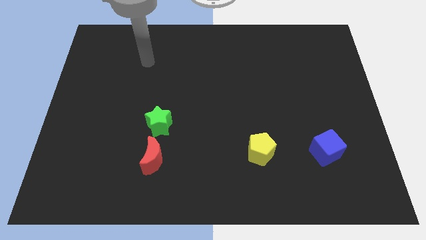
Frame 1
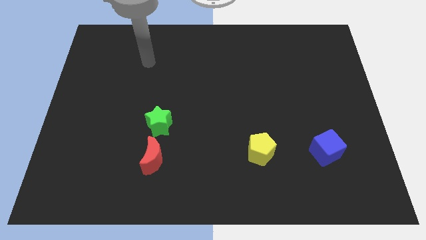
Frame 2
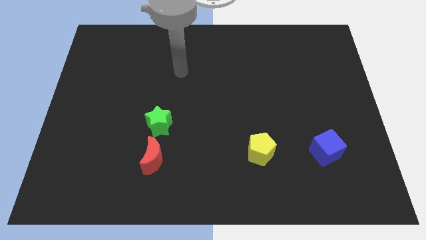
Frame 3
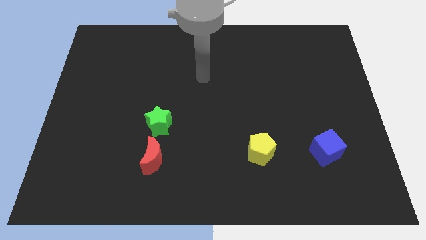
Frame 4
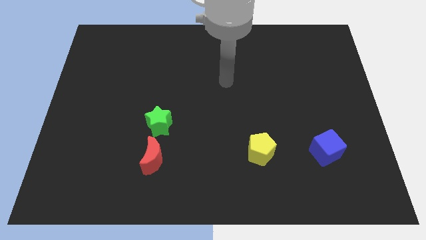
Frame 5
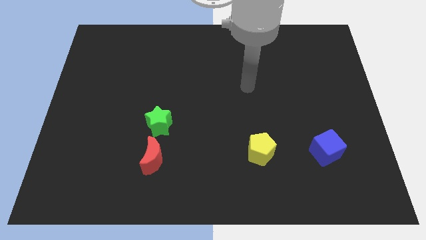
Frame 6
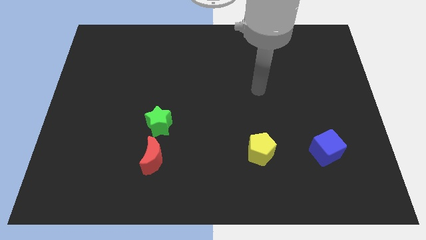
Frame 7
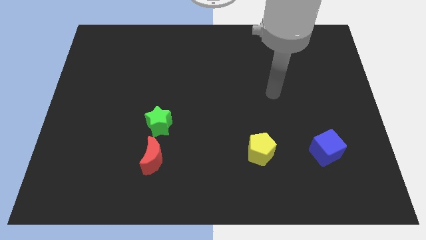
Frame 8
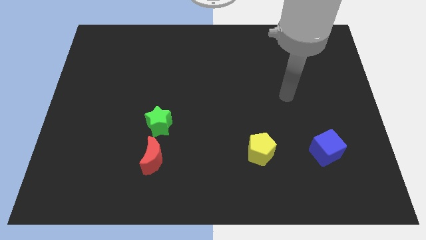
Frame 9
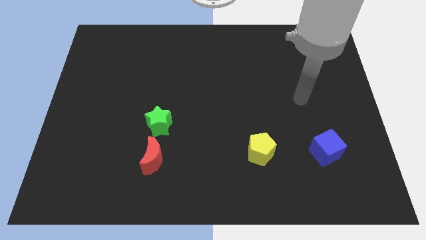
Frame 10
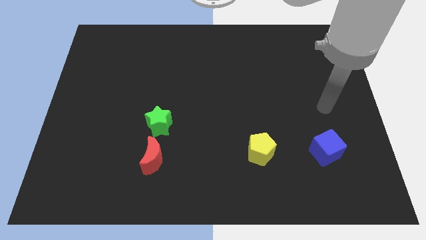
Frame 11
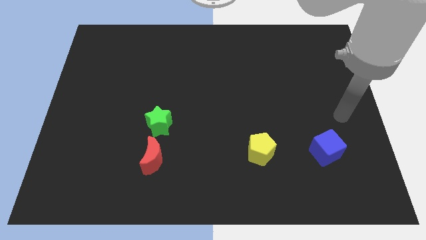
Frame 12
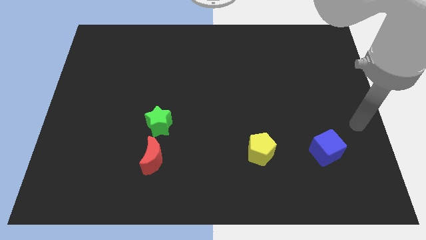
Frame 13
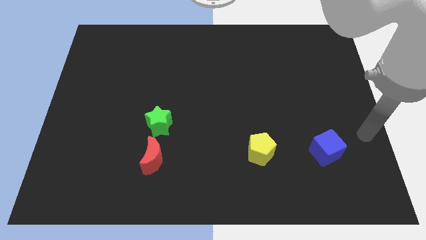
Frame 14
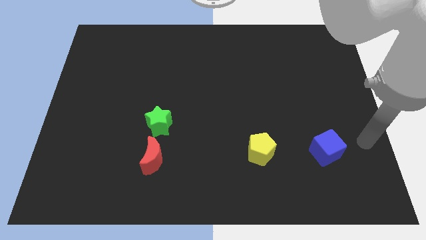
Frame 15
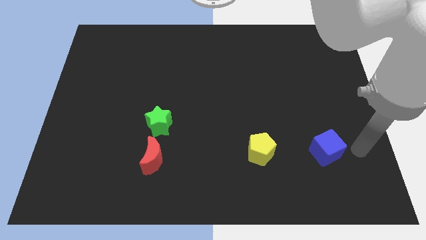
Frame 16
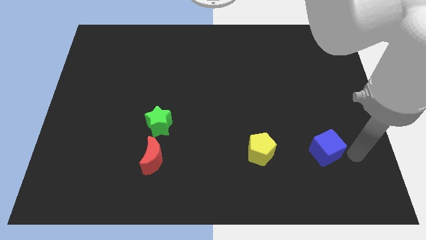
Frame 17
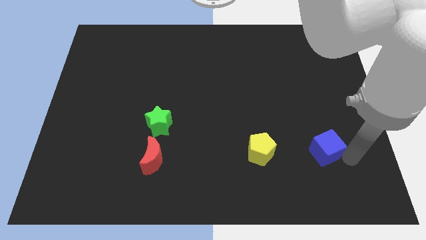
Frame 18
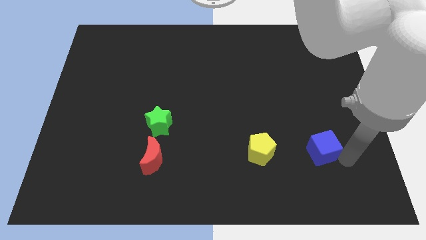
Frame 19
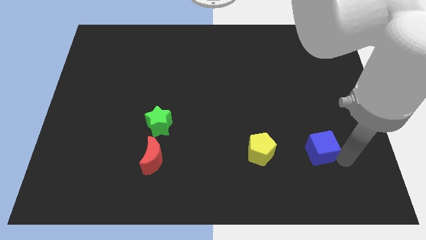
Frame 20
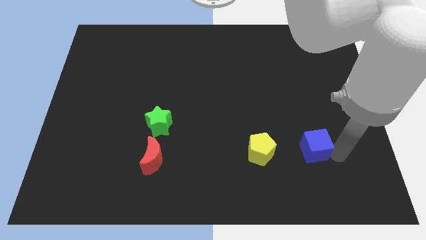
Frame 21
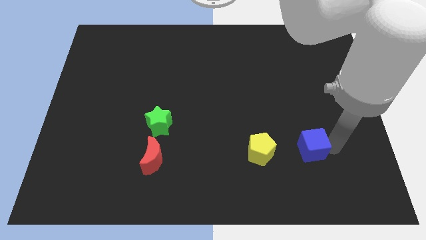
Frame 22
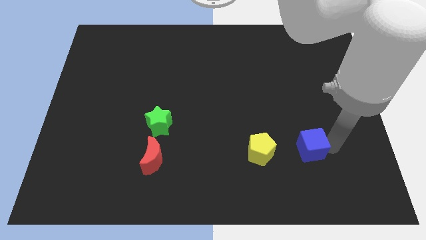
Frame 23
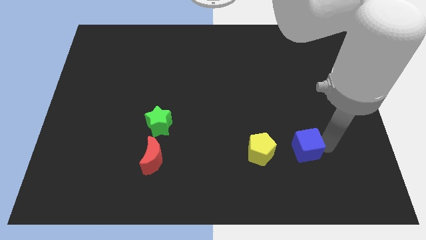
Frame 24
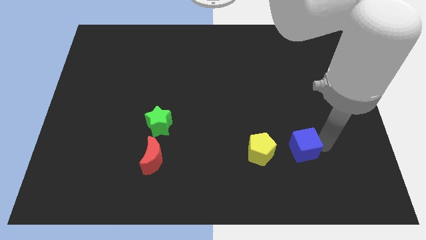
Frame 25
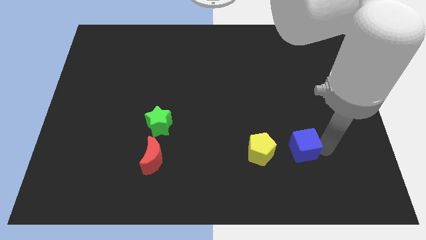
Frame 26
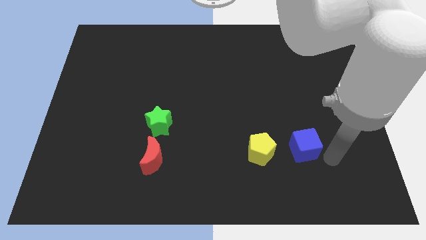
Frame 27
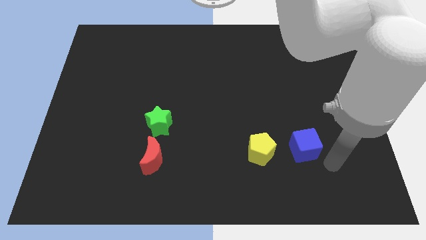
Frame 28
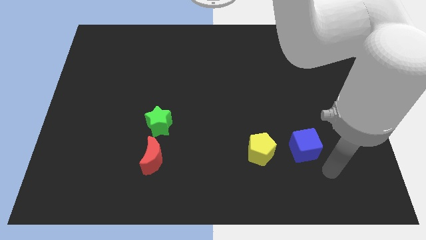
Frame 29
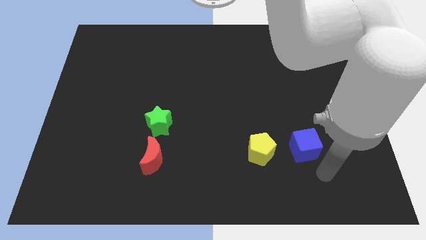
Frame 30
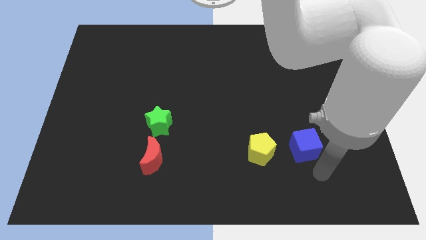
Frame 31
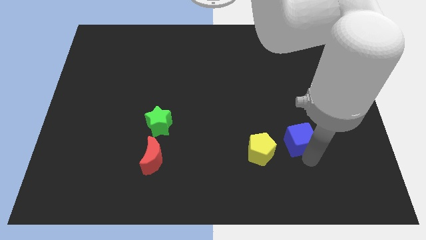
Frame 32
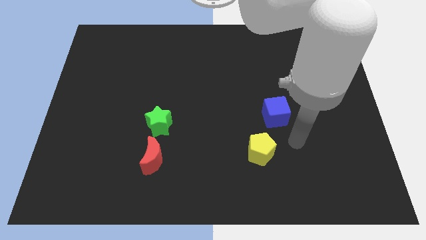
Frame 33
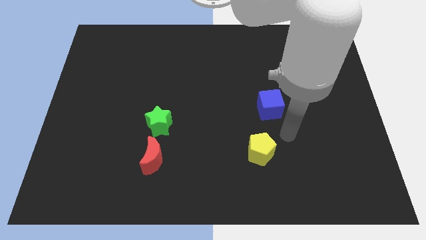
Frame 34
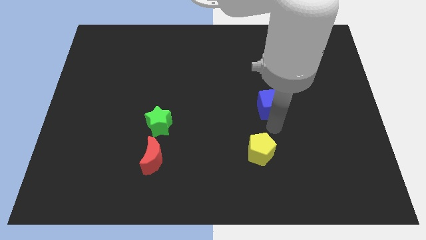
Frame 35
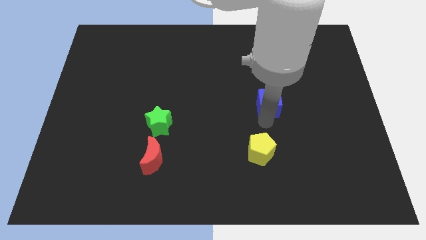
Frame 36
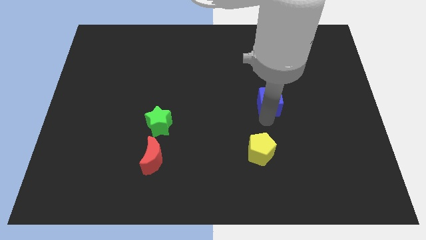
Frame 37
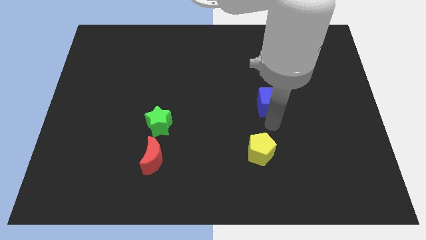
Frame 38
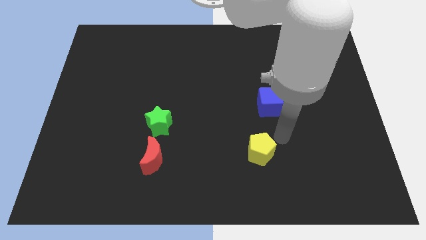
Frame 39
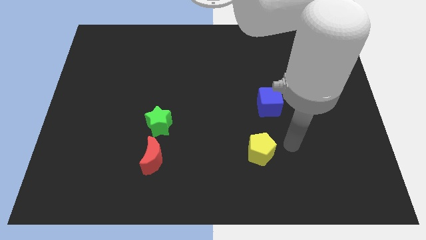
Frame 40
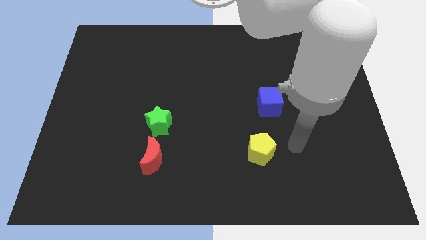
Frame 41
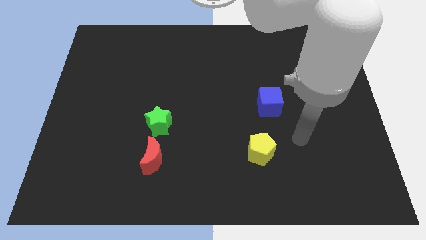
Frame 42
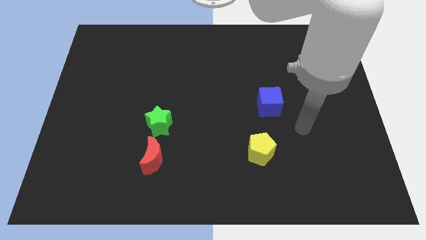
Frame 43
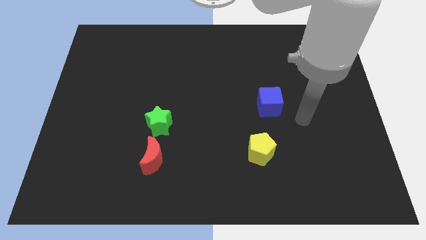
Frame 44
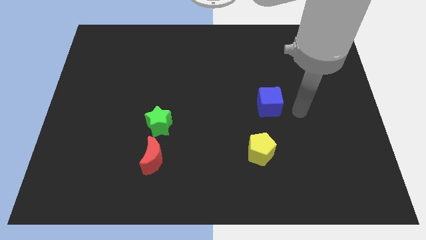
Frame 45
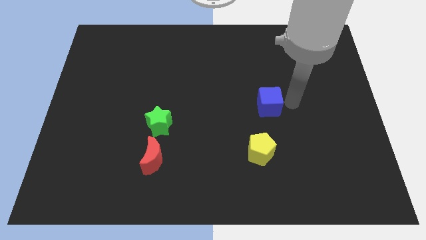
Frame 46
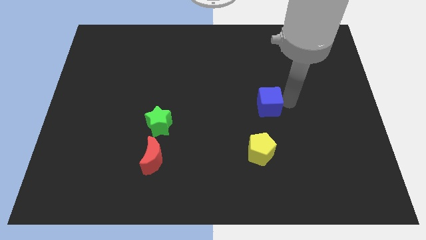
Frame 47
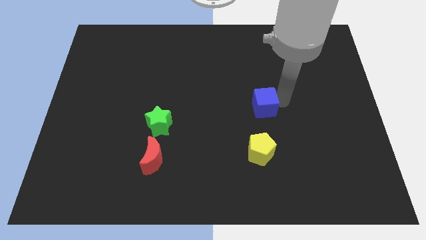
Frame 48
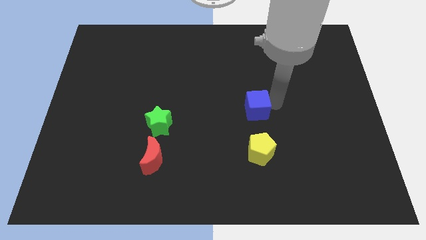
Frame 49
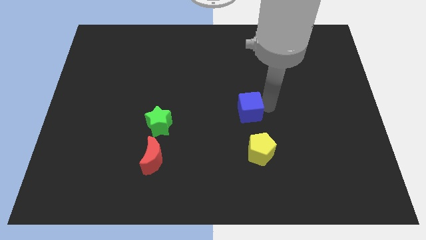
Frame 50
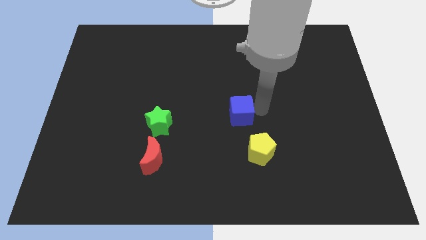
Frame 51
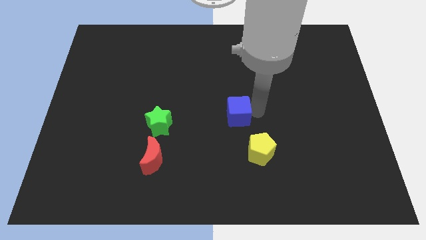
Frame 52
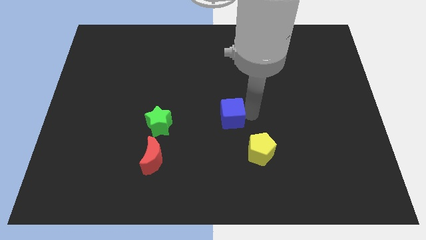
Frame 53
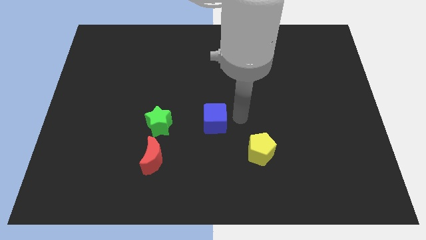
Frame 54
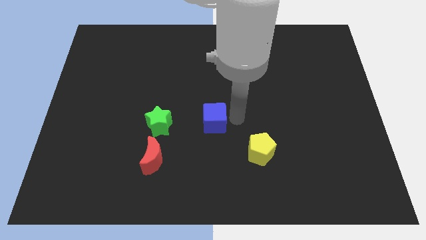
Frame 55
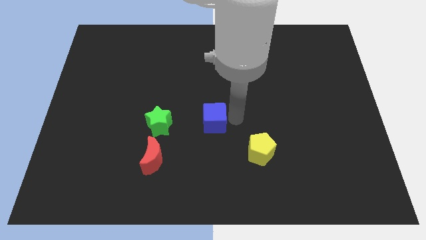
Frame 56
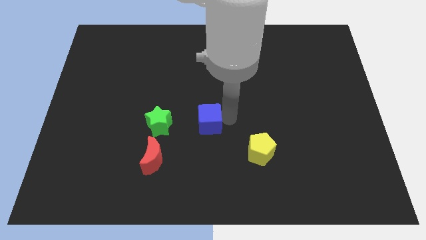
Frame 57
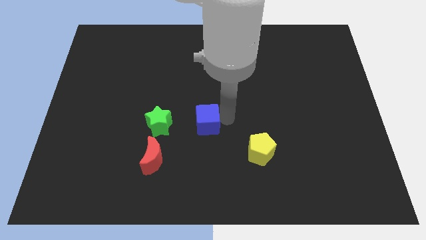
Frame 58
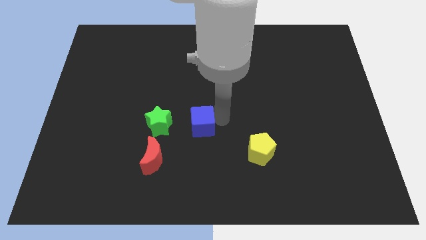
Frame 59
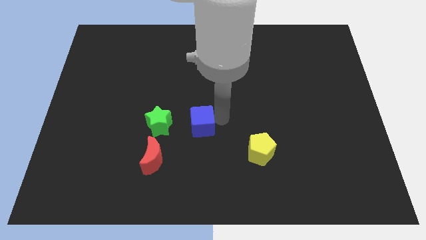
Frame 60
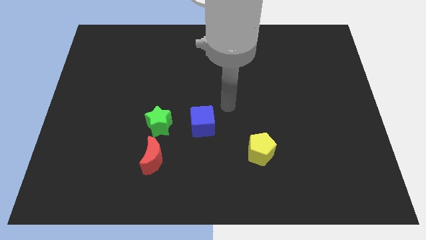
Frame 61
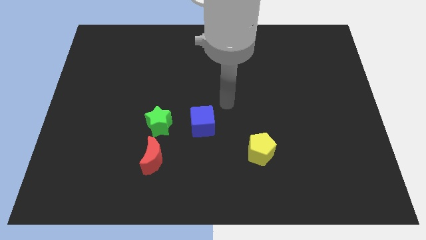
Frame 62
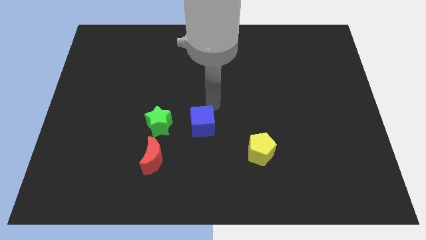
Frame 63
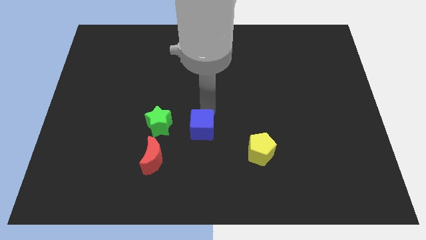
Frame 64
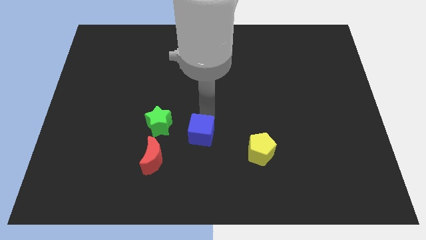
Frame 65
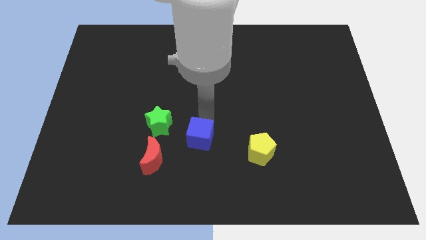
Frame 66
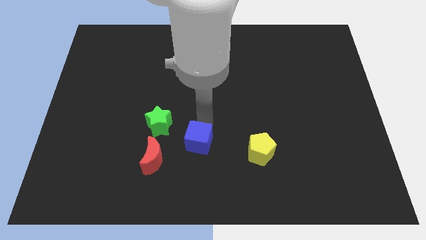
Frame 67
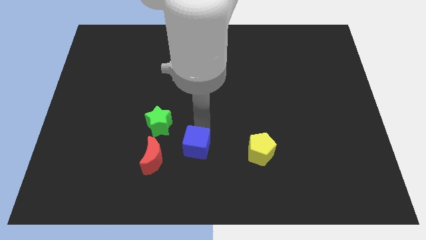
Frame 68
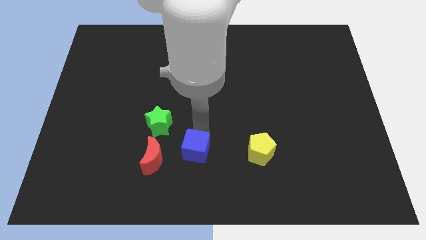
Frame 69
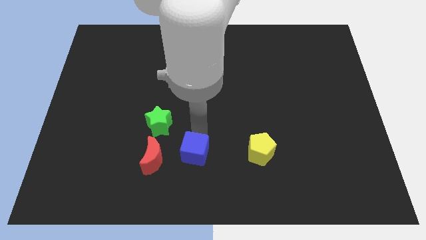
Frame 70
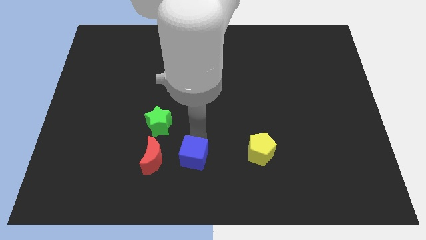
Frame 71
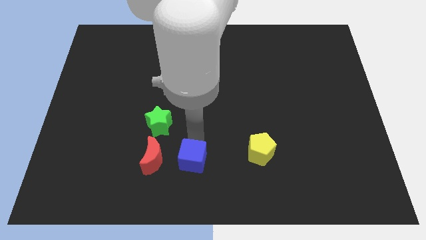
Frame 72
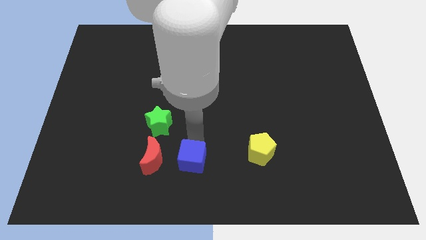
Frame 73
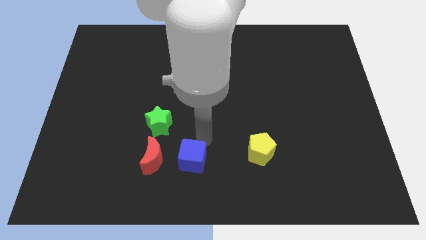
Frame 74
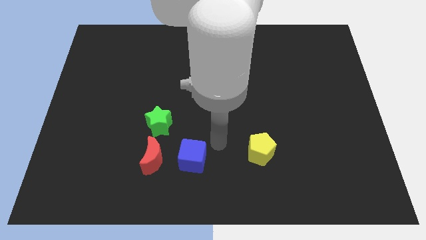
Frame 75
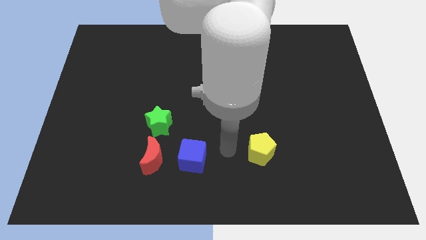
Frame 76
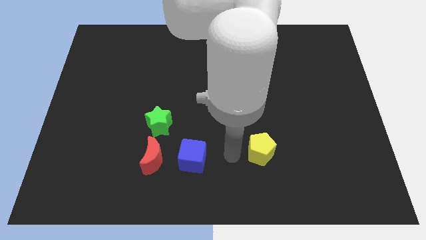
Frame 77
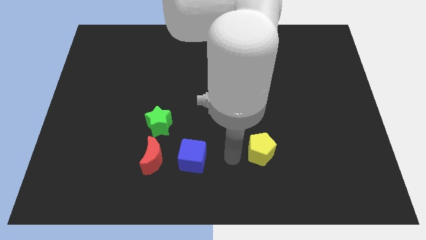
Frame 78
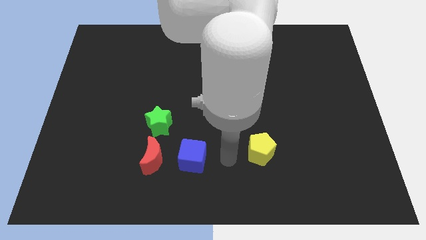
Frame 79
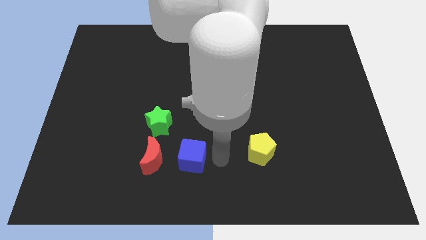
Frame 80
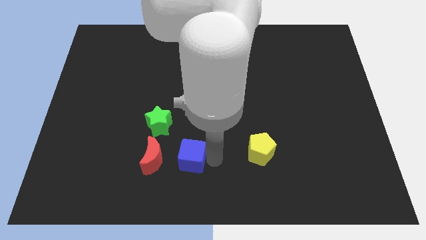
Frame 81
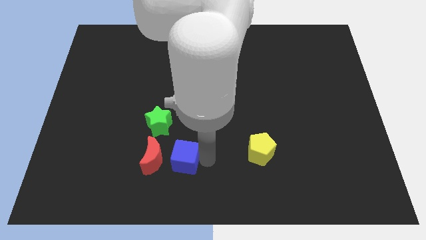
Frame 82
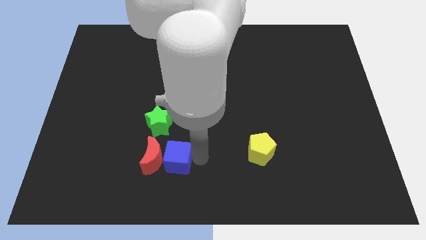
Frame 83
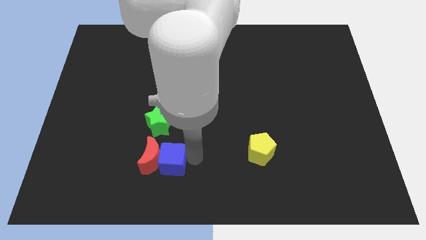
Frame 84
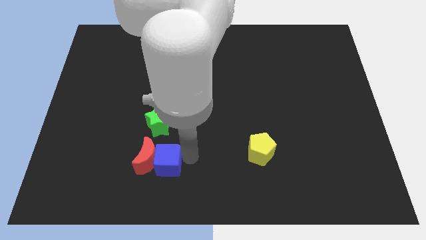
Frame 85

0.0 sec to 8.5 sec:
slide the cube next to the moon
